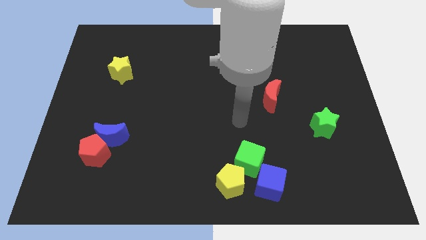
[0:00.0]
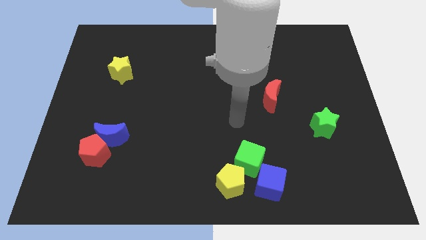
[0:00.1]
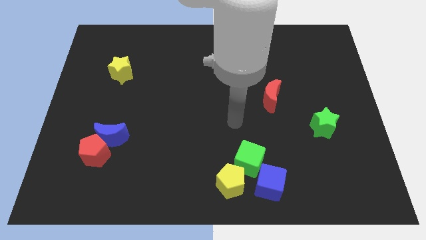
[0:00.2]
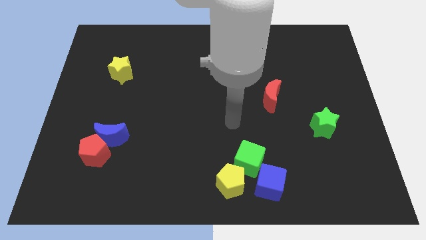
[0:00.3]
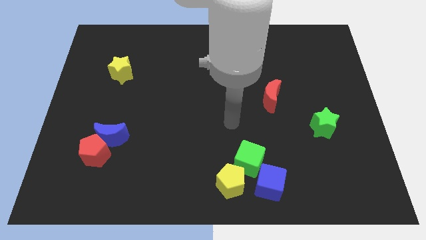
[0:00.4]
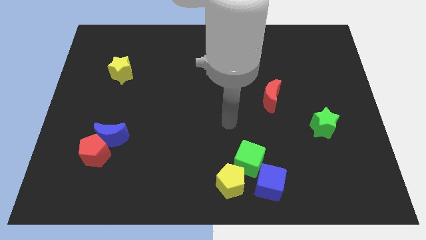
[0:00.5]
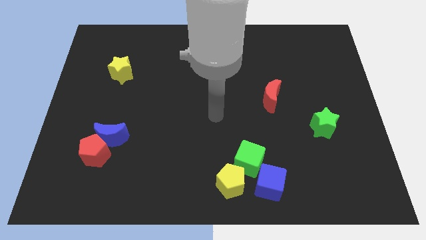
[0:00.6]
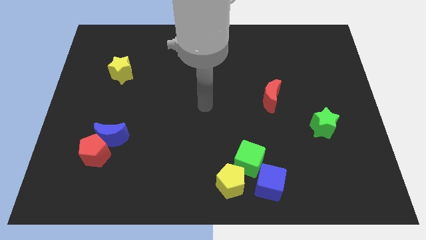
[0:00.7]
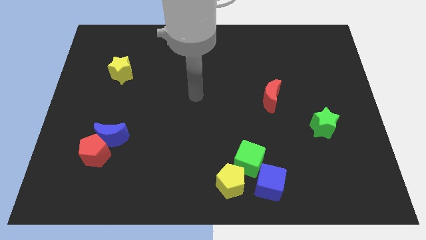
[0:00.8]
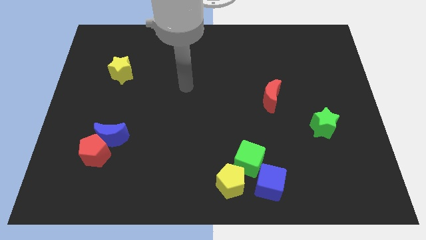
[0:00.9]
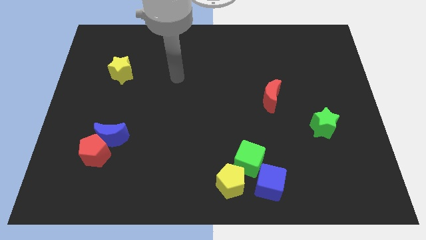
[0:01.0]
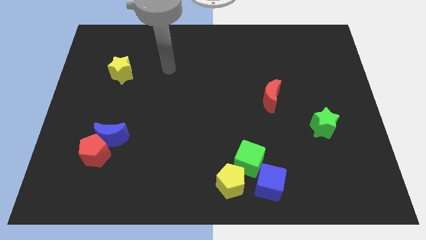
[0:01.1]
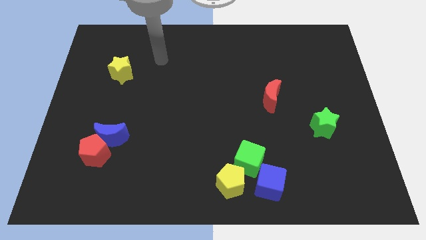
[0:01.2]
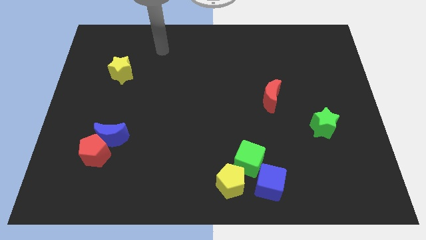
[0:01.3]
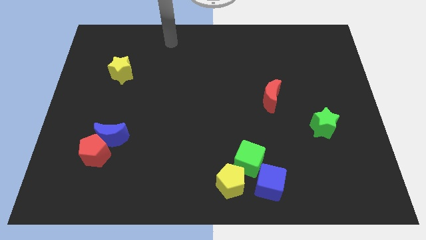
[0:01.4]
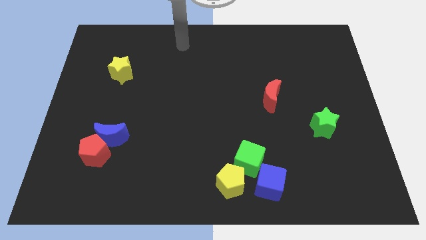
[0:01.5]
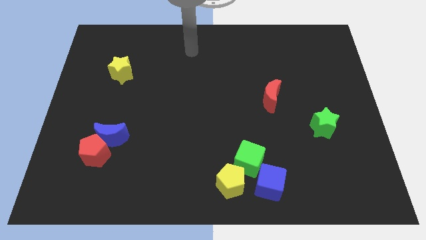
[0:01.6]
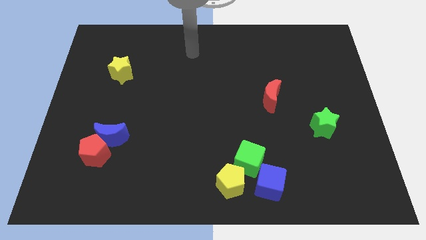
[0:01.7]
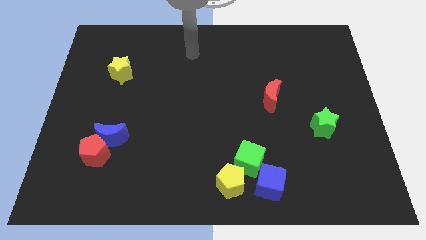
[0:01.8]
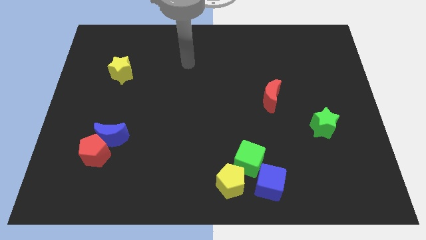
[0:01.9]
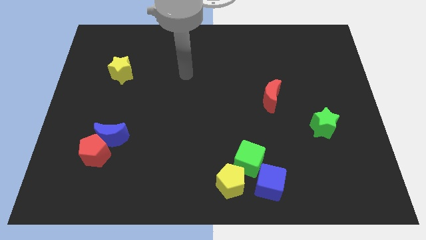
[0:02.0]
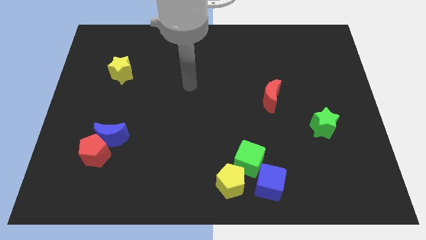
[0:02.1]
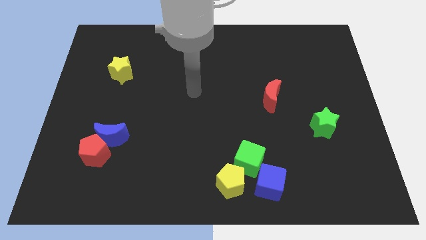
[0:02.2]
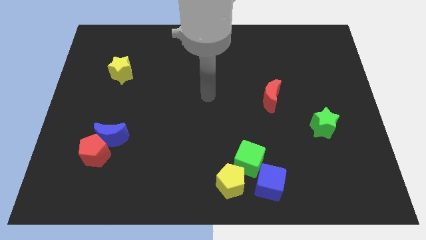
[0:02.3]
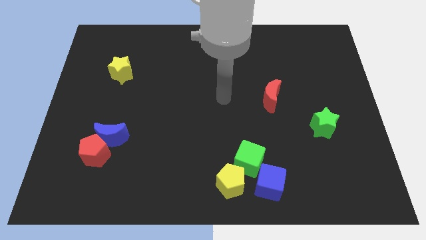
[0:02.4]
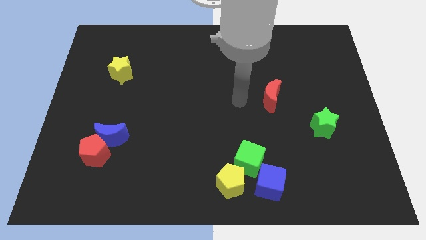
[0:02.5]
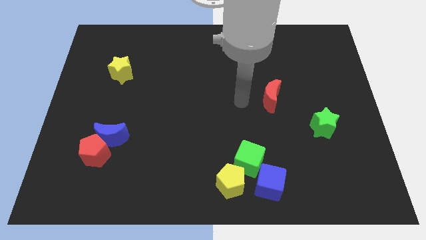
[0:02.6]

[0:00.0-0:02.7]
place your arm to the left of the red crescent

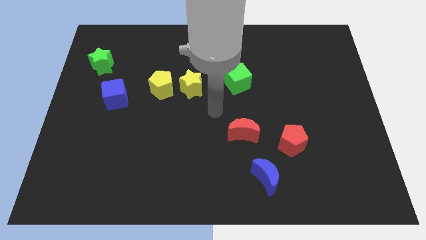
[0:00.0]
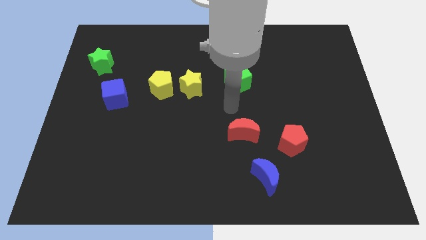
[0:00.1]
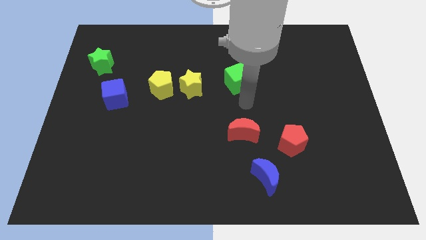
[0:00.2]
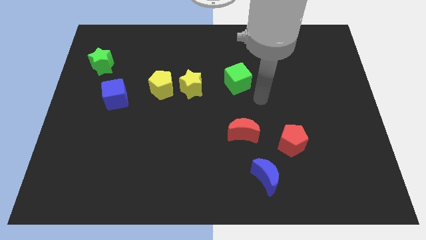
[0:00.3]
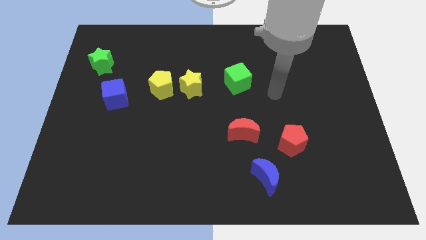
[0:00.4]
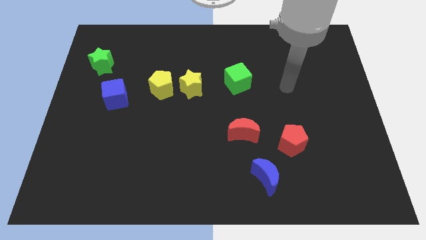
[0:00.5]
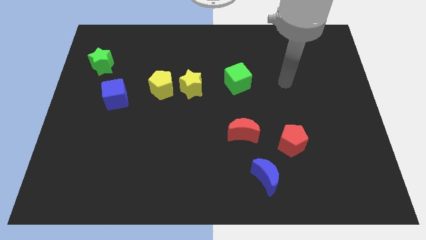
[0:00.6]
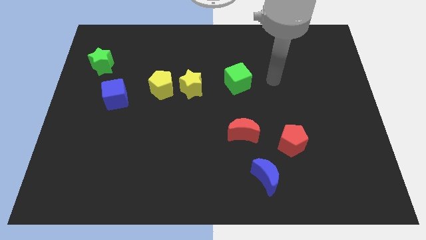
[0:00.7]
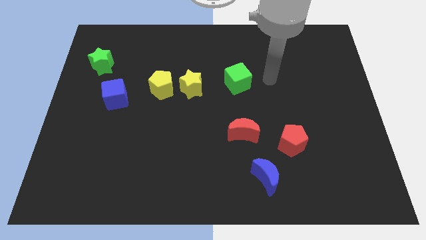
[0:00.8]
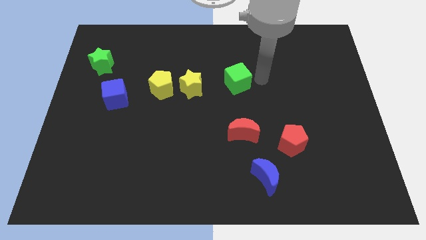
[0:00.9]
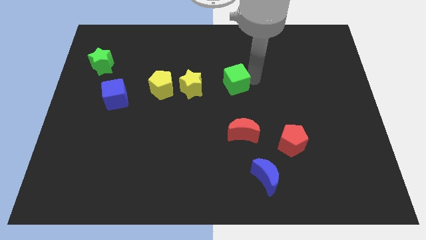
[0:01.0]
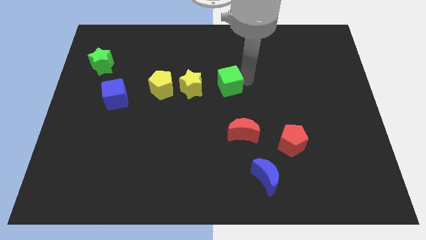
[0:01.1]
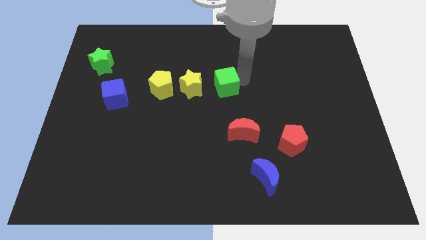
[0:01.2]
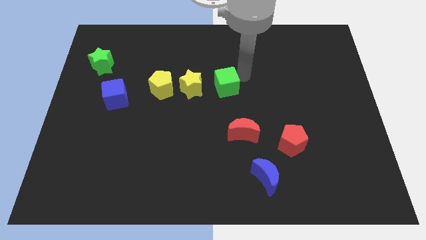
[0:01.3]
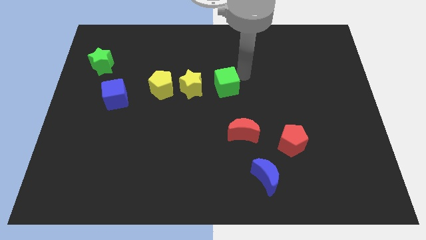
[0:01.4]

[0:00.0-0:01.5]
adjust the green cube to the right of the yellow star

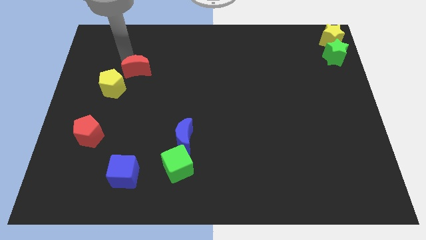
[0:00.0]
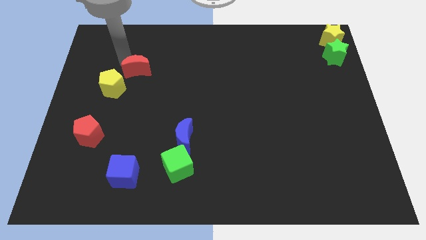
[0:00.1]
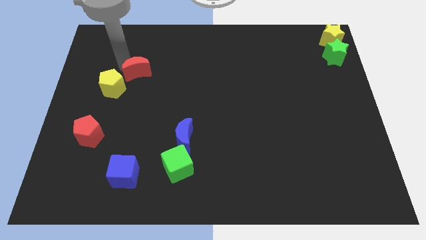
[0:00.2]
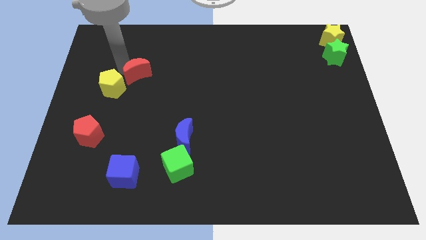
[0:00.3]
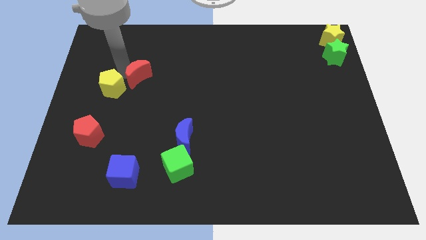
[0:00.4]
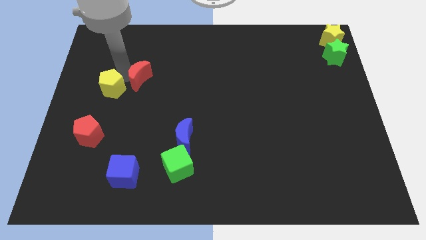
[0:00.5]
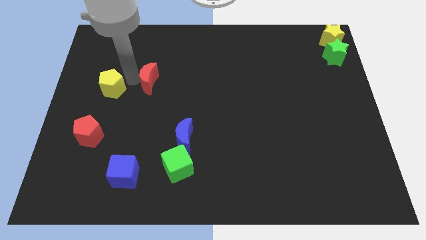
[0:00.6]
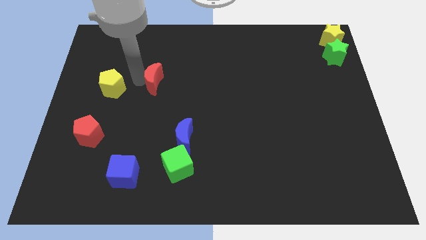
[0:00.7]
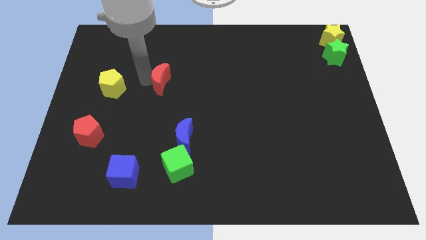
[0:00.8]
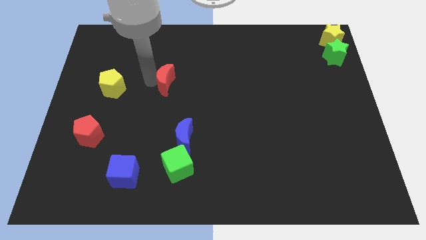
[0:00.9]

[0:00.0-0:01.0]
move red moon slightly right

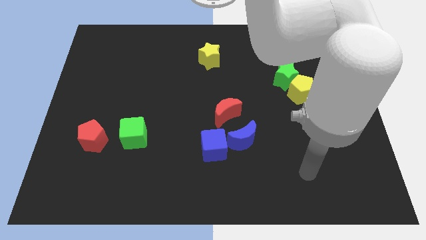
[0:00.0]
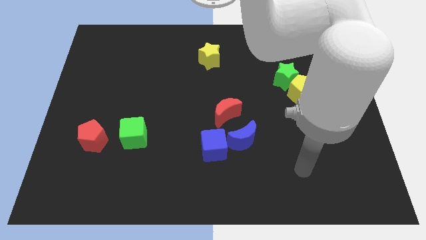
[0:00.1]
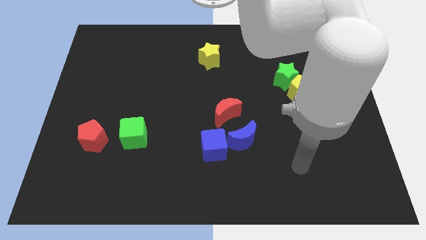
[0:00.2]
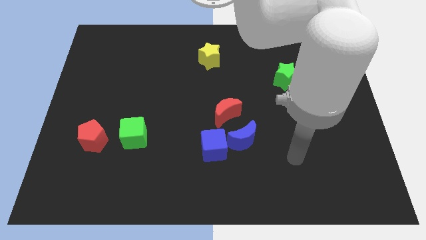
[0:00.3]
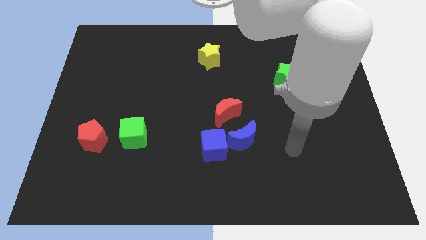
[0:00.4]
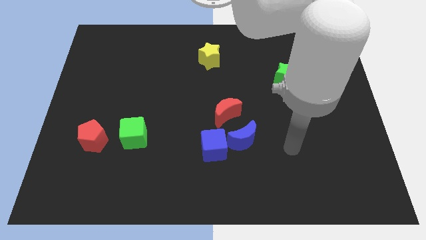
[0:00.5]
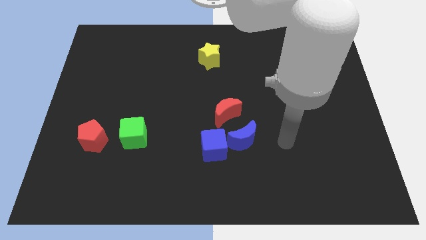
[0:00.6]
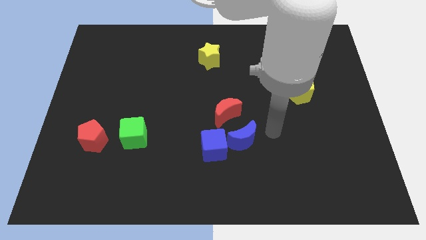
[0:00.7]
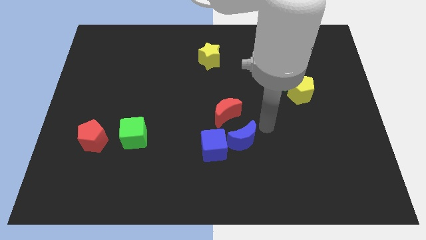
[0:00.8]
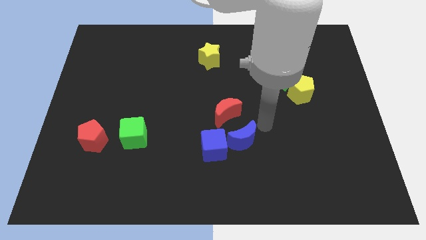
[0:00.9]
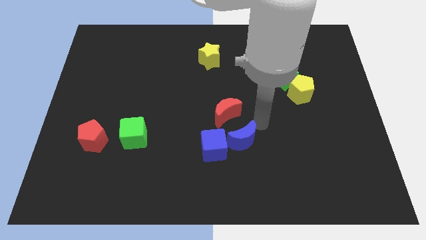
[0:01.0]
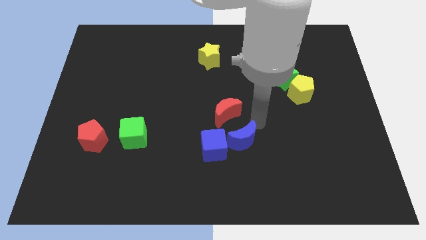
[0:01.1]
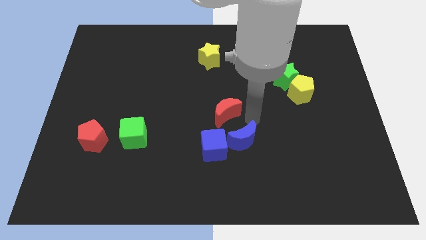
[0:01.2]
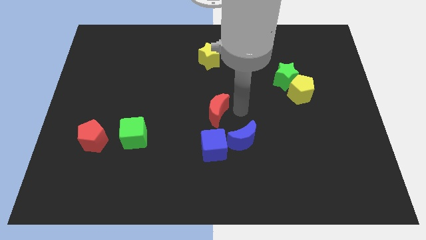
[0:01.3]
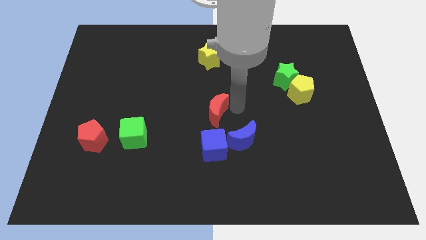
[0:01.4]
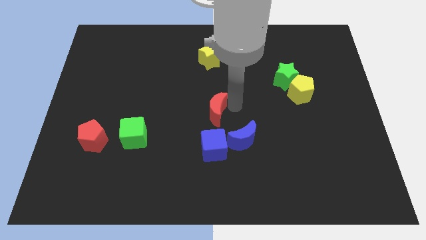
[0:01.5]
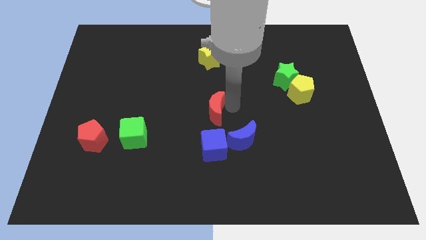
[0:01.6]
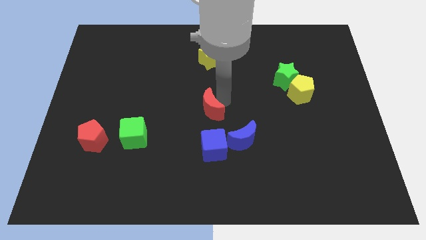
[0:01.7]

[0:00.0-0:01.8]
move red moon to the center of the board

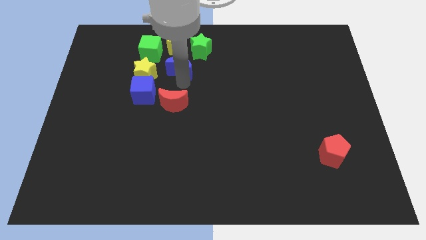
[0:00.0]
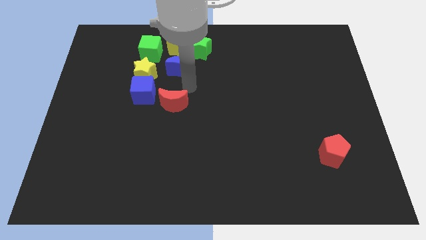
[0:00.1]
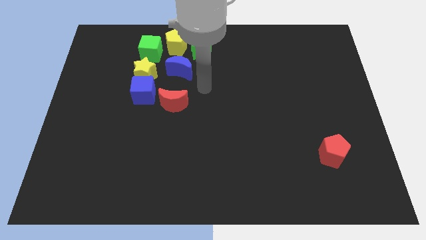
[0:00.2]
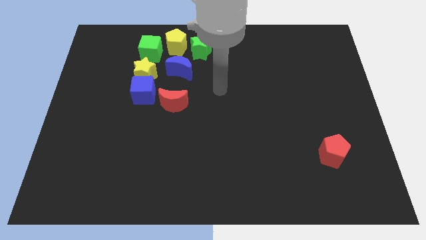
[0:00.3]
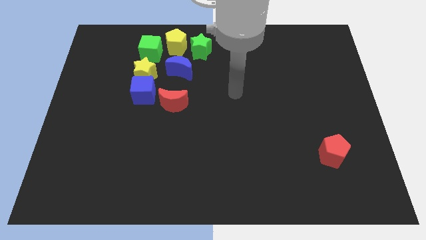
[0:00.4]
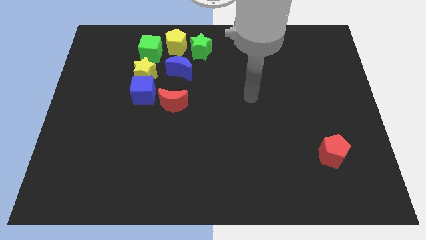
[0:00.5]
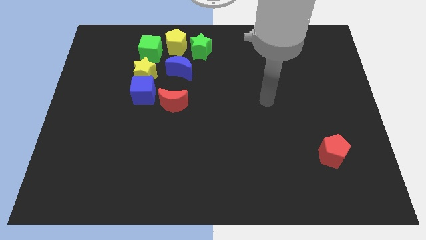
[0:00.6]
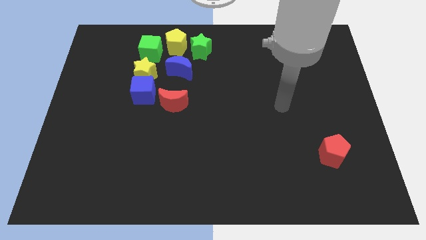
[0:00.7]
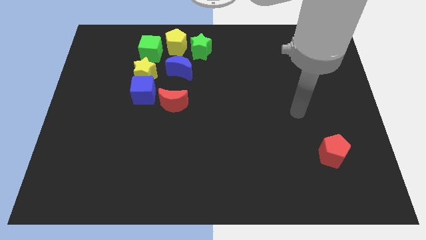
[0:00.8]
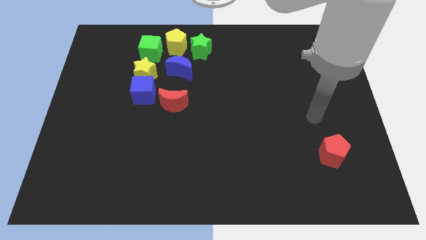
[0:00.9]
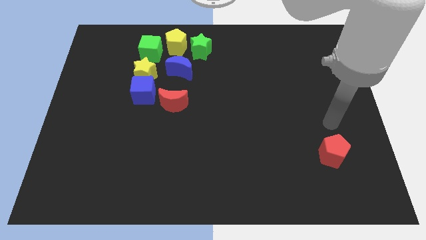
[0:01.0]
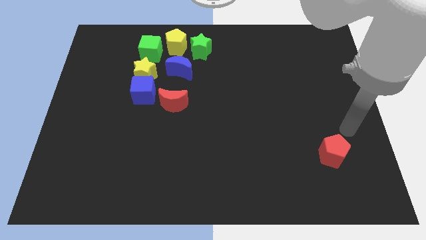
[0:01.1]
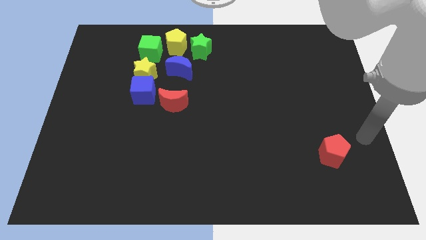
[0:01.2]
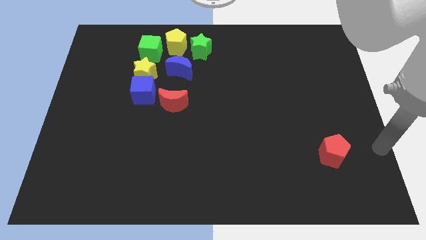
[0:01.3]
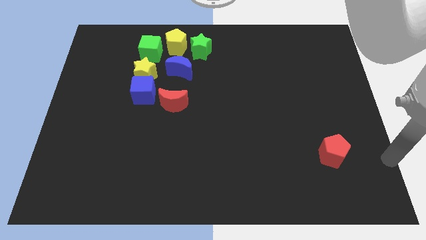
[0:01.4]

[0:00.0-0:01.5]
move the arm away from the blue moon

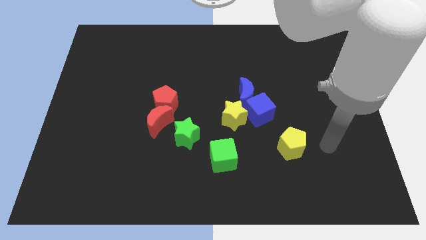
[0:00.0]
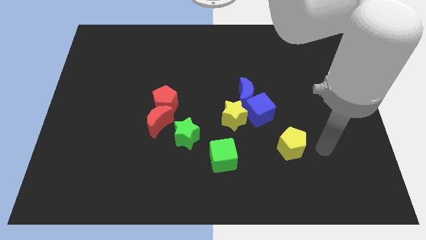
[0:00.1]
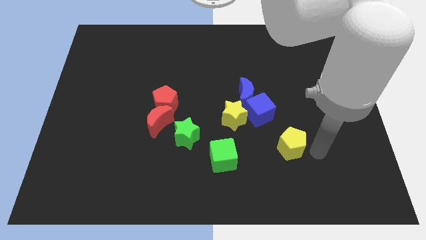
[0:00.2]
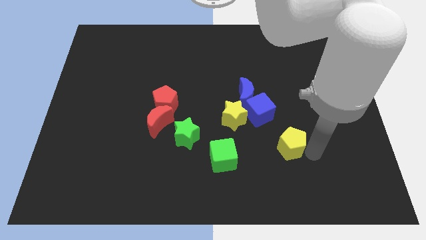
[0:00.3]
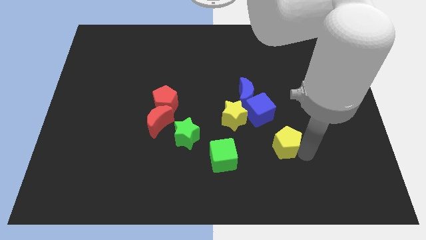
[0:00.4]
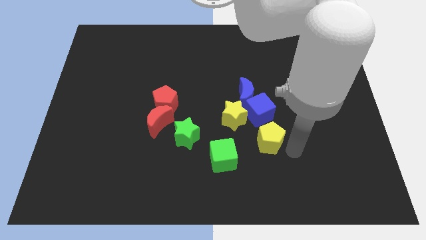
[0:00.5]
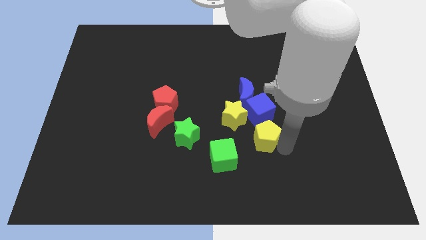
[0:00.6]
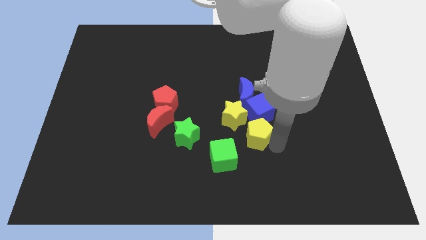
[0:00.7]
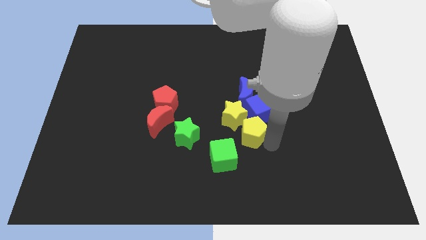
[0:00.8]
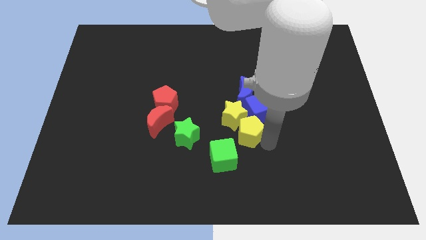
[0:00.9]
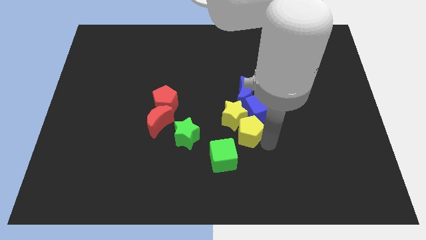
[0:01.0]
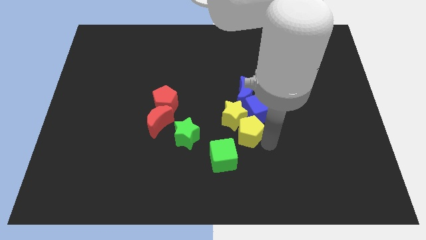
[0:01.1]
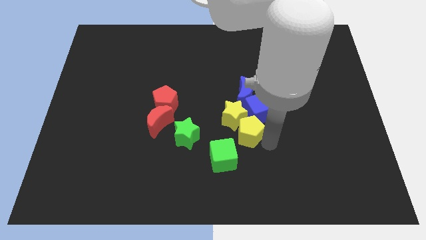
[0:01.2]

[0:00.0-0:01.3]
push the yellow pentagon close to the yellow star
